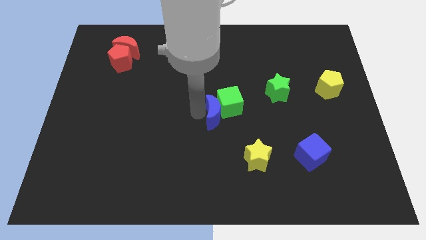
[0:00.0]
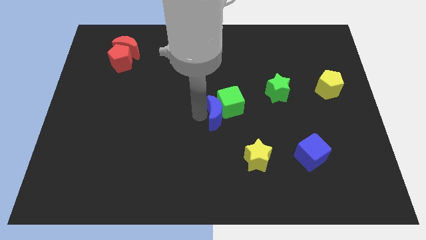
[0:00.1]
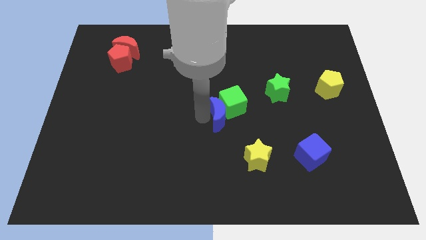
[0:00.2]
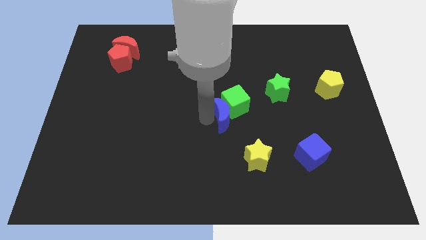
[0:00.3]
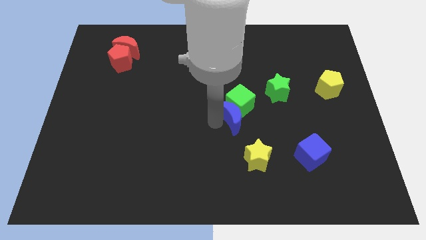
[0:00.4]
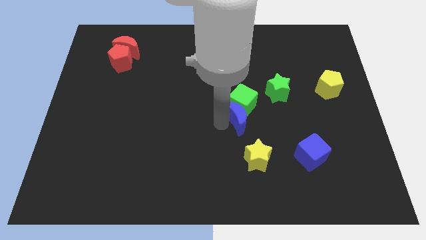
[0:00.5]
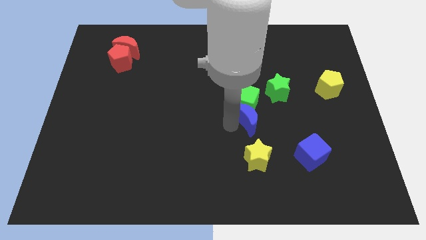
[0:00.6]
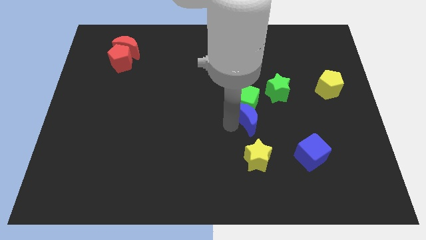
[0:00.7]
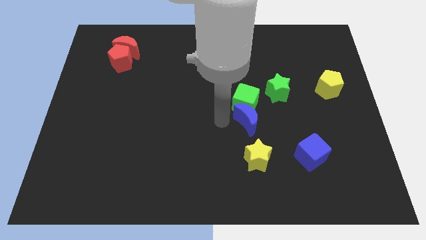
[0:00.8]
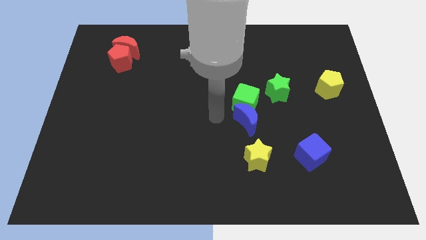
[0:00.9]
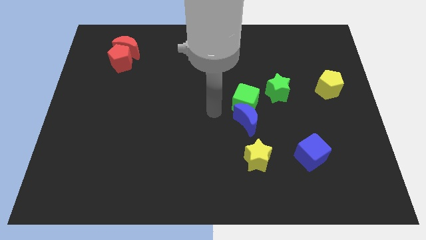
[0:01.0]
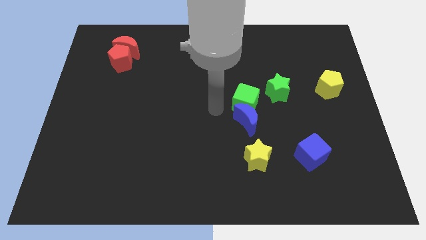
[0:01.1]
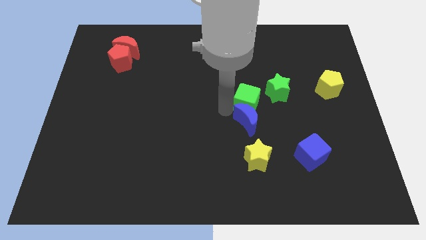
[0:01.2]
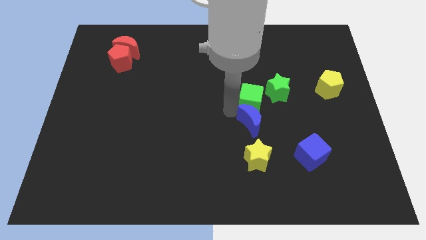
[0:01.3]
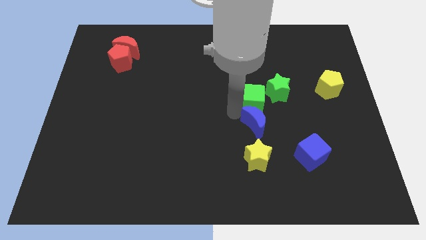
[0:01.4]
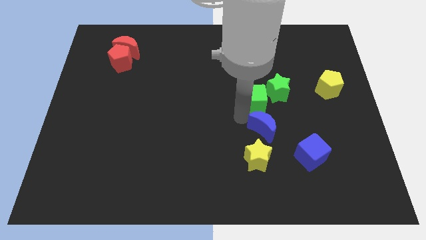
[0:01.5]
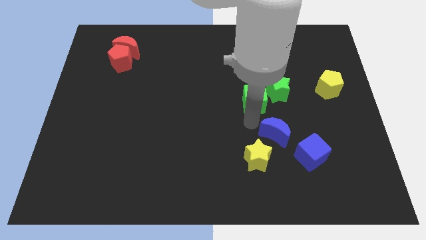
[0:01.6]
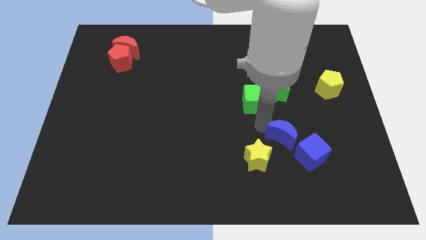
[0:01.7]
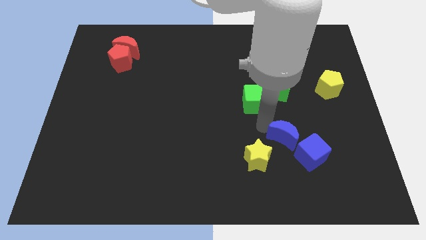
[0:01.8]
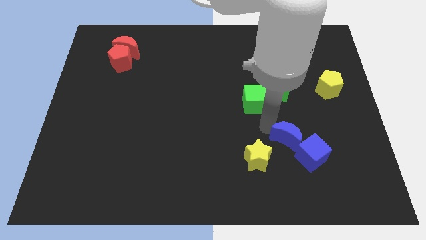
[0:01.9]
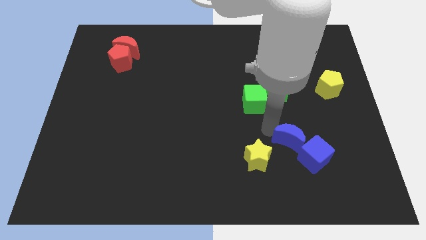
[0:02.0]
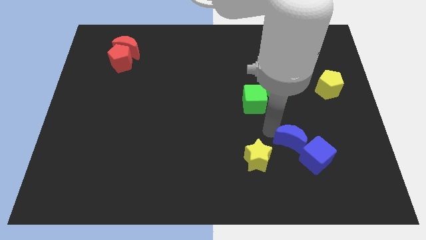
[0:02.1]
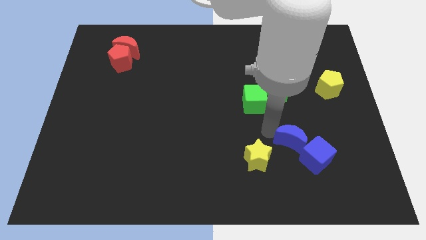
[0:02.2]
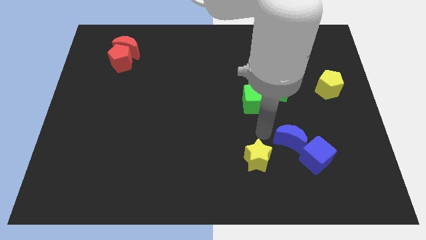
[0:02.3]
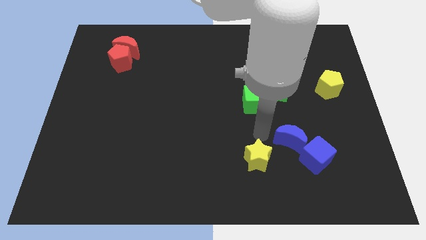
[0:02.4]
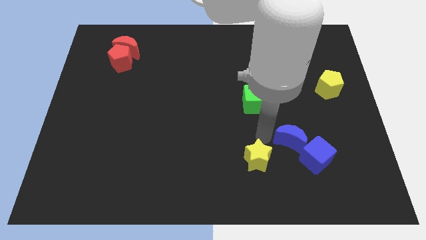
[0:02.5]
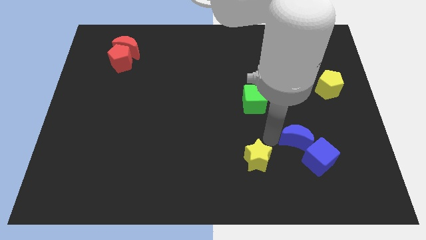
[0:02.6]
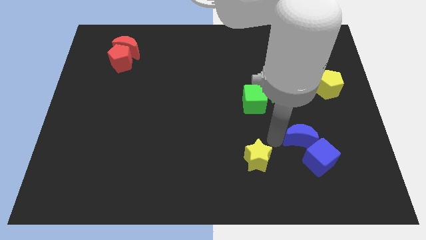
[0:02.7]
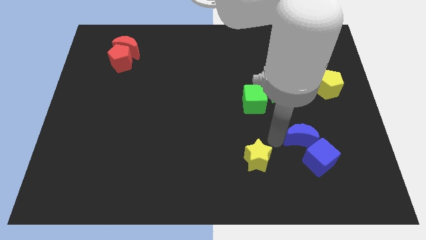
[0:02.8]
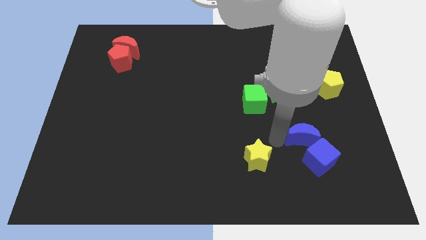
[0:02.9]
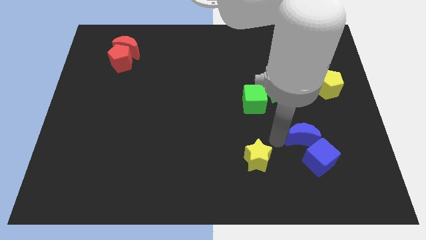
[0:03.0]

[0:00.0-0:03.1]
place the blue moon in between the blue cube and green cube

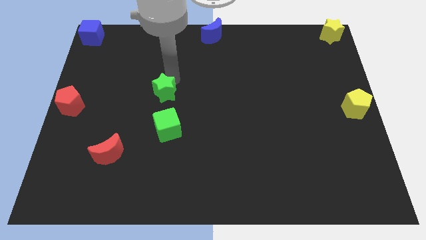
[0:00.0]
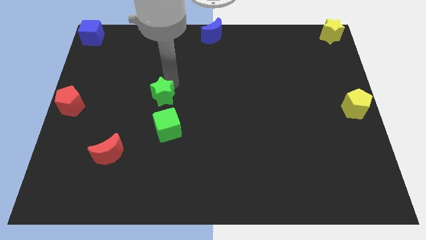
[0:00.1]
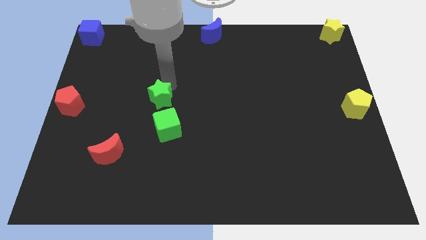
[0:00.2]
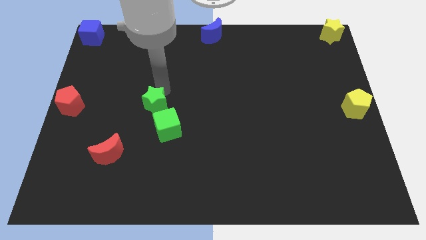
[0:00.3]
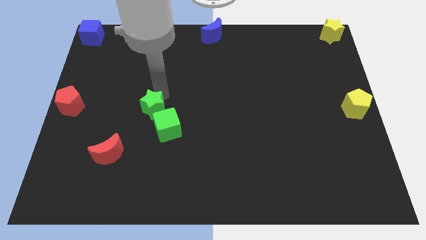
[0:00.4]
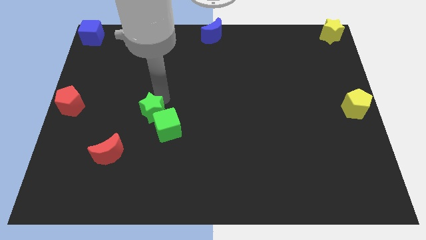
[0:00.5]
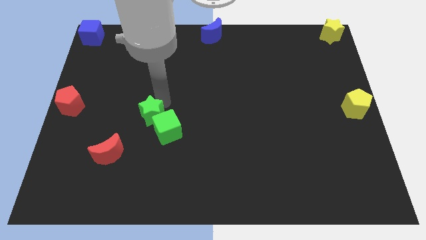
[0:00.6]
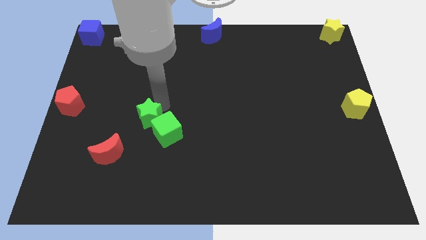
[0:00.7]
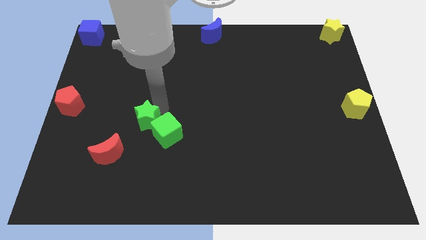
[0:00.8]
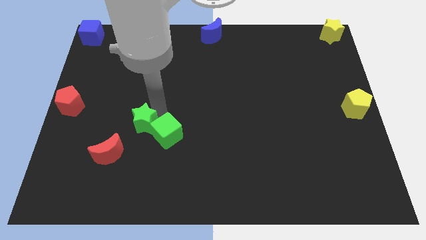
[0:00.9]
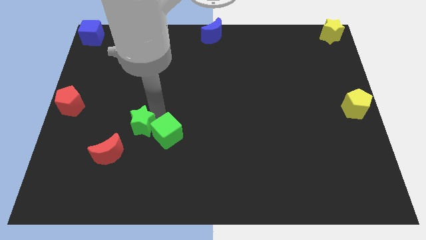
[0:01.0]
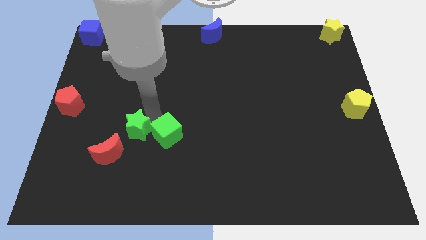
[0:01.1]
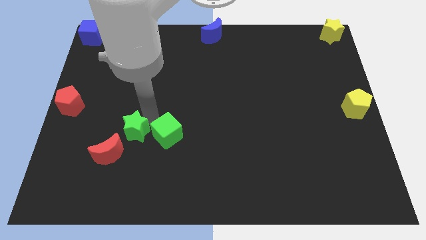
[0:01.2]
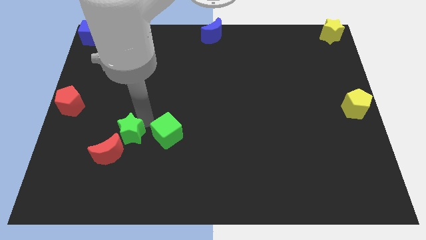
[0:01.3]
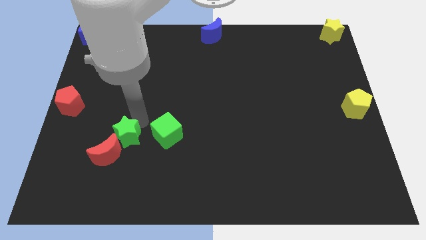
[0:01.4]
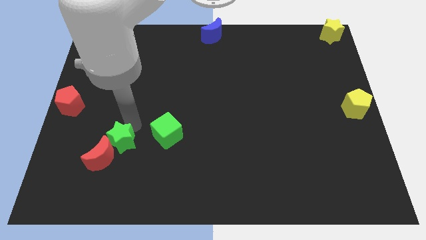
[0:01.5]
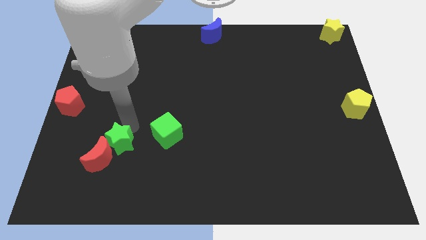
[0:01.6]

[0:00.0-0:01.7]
push green star into the red moon

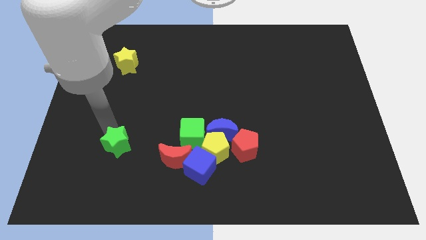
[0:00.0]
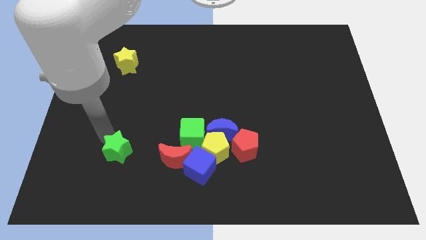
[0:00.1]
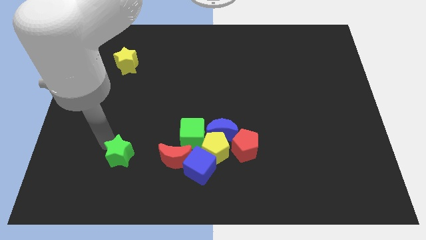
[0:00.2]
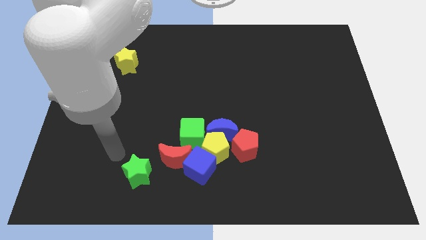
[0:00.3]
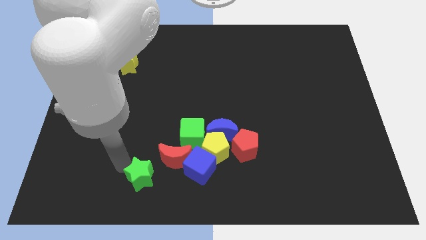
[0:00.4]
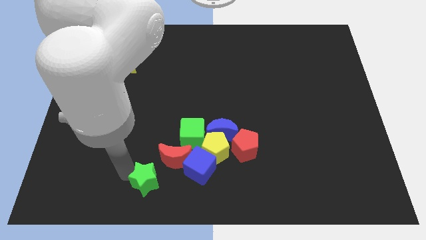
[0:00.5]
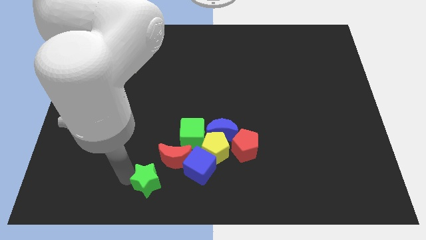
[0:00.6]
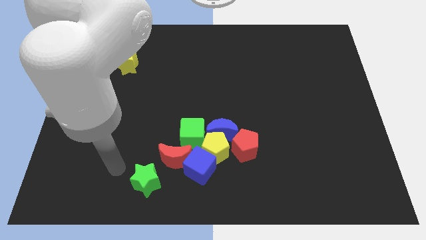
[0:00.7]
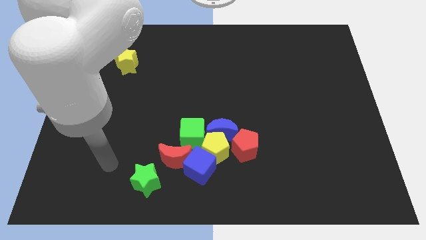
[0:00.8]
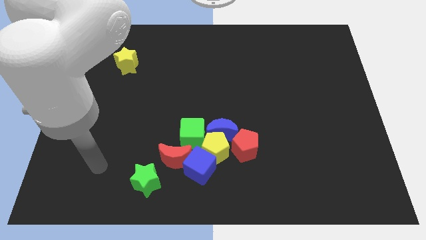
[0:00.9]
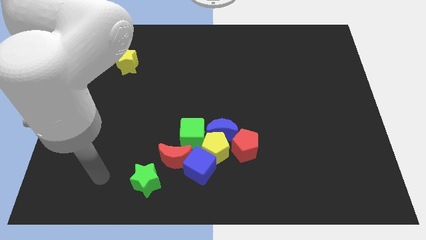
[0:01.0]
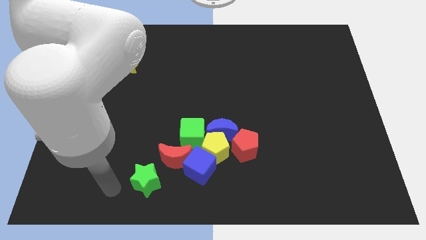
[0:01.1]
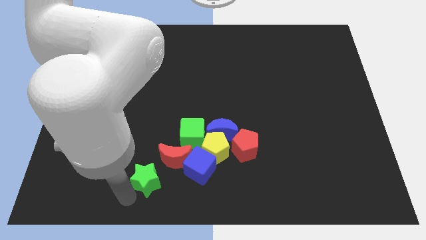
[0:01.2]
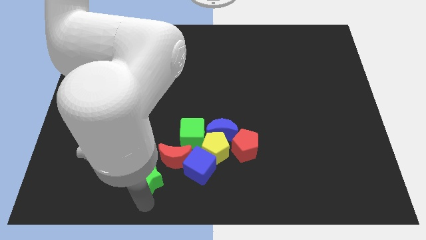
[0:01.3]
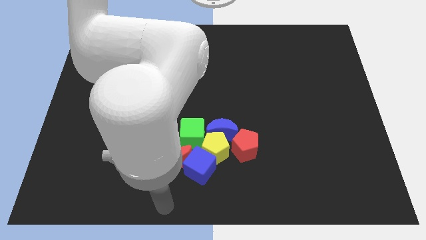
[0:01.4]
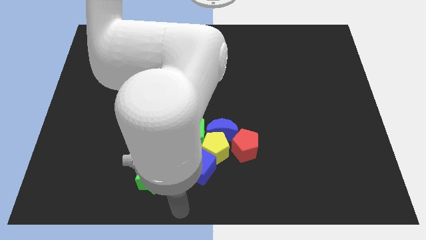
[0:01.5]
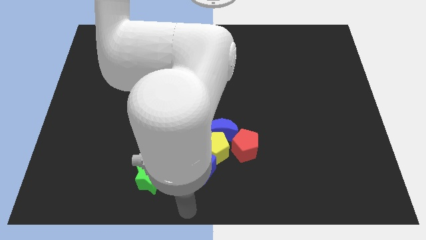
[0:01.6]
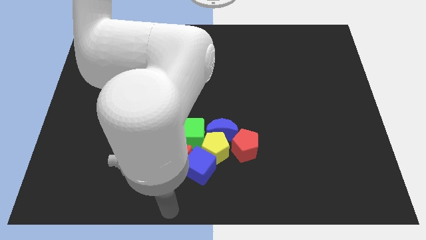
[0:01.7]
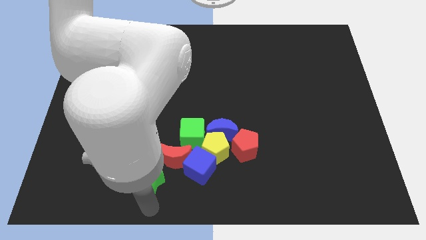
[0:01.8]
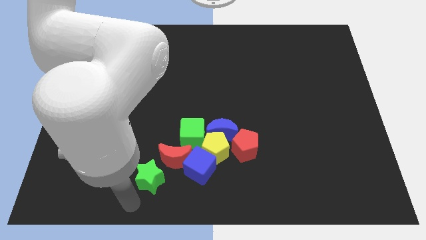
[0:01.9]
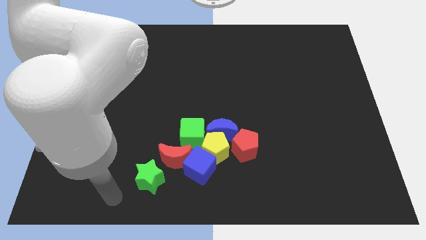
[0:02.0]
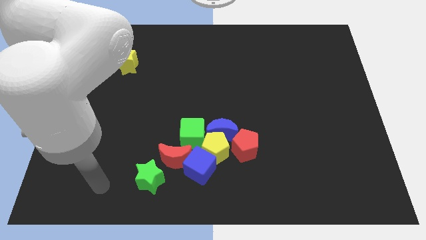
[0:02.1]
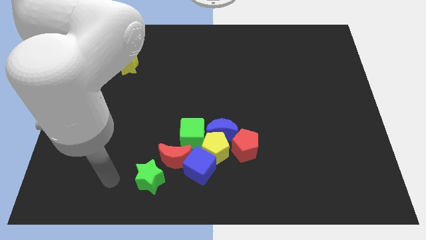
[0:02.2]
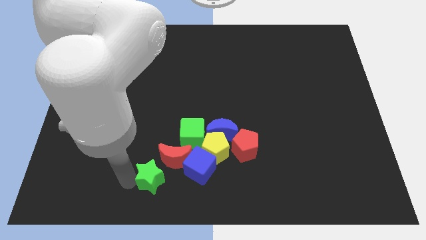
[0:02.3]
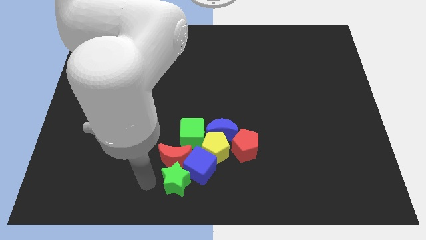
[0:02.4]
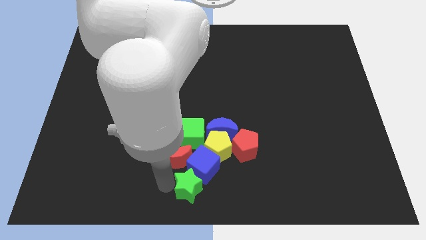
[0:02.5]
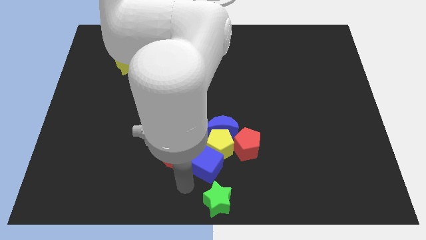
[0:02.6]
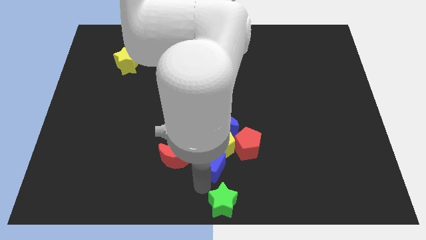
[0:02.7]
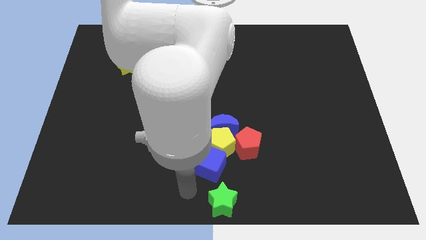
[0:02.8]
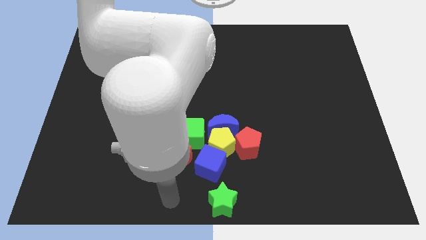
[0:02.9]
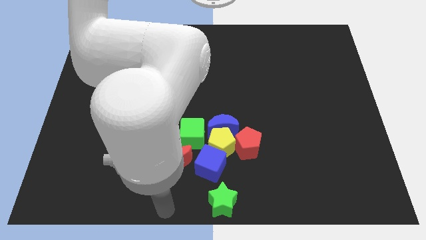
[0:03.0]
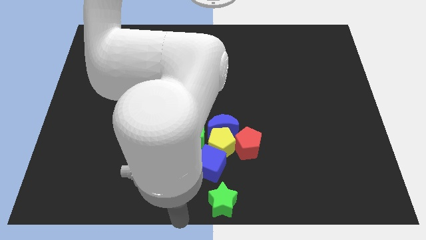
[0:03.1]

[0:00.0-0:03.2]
move the green star towards the bottom center corner of the board

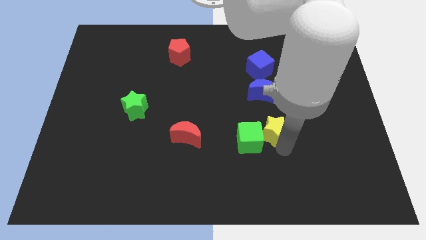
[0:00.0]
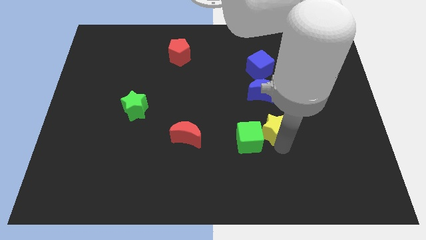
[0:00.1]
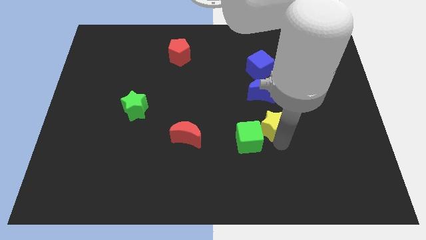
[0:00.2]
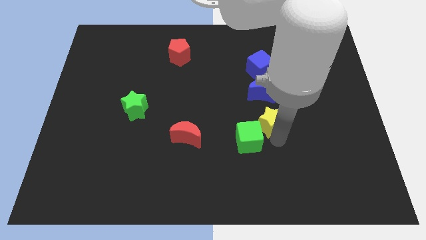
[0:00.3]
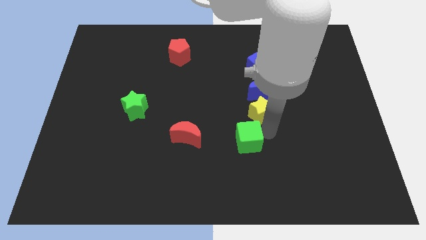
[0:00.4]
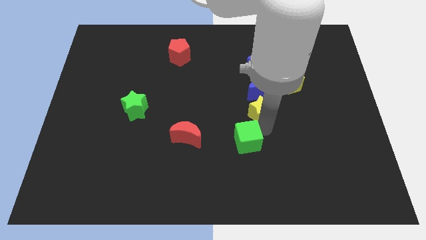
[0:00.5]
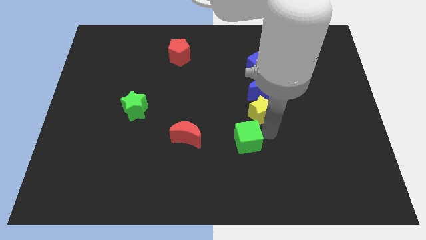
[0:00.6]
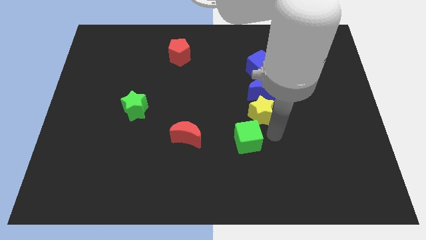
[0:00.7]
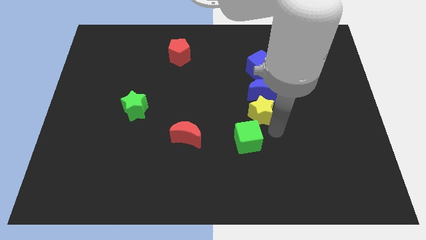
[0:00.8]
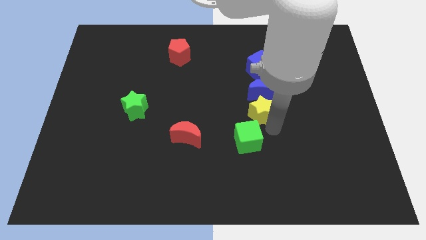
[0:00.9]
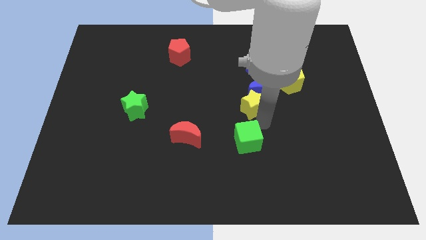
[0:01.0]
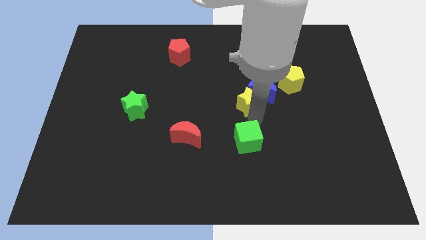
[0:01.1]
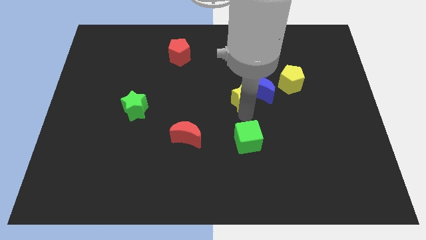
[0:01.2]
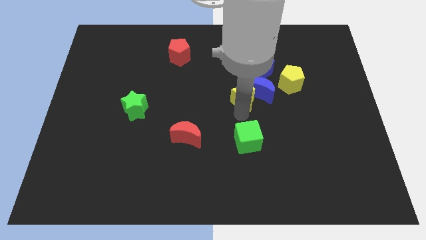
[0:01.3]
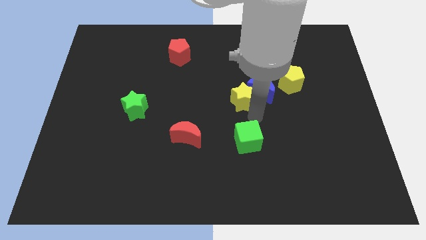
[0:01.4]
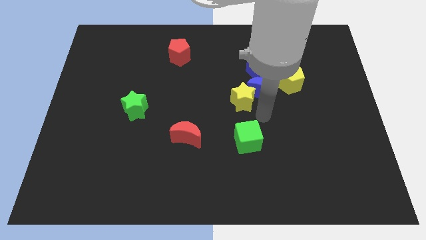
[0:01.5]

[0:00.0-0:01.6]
move the yellow star into the blue crescent
